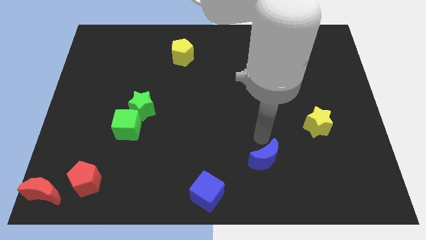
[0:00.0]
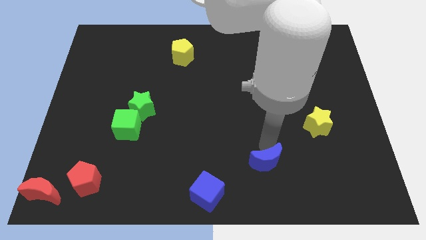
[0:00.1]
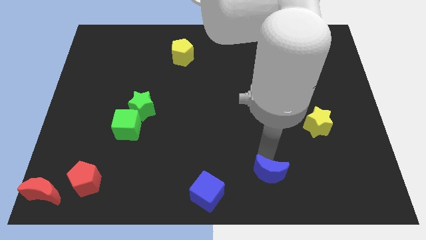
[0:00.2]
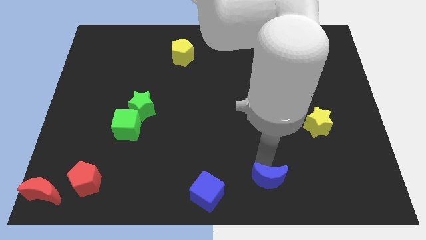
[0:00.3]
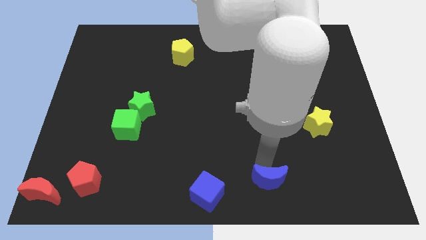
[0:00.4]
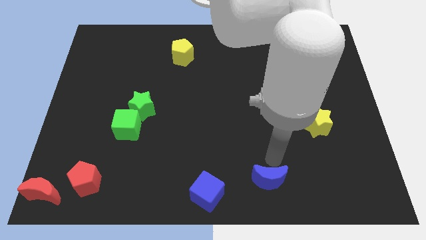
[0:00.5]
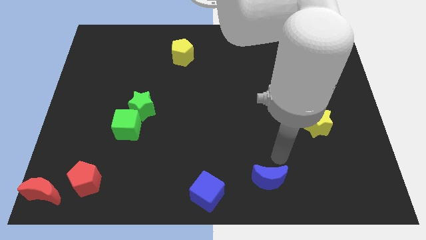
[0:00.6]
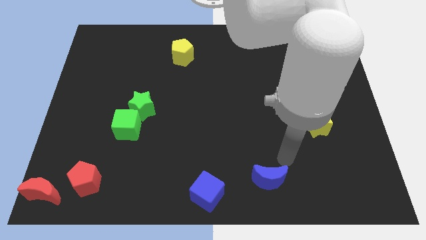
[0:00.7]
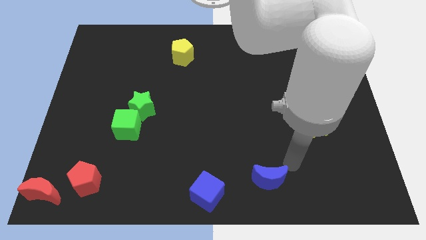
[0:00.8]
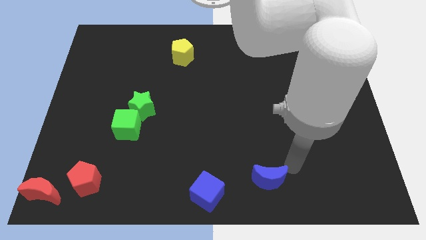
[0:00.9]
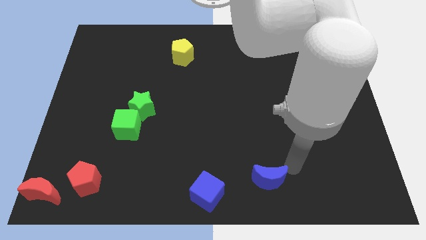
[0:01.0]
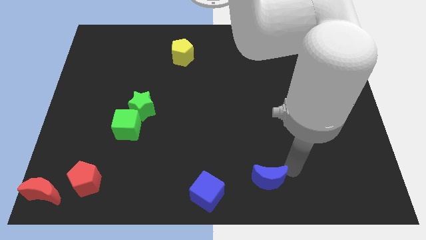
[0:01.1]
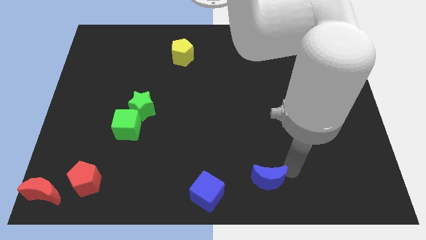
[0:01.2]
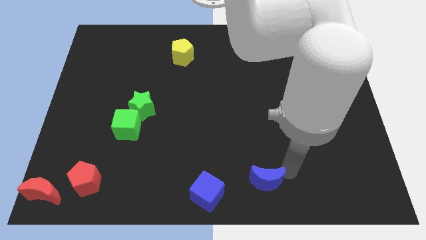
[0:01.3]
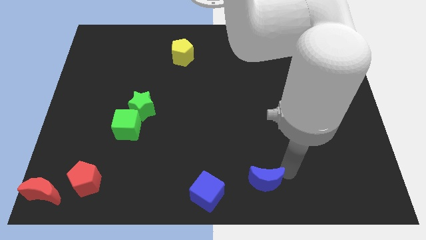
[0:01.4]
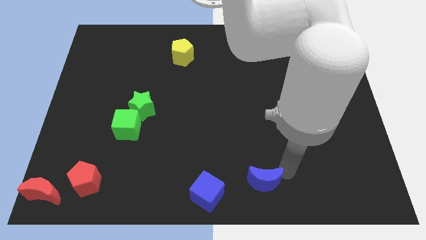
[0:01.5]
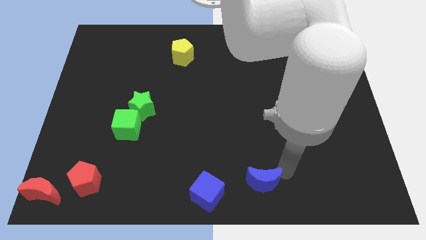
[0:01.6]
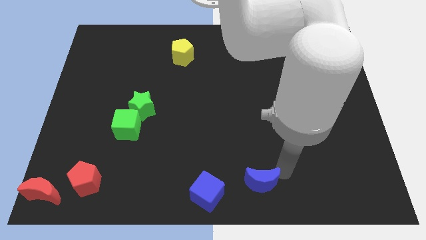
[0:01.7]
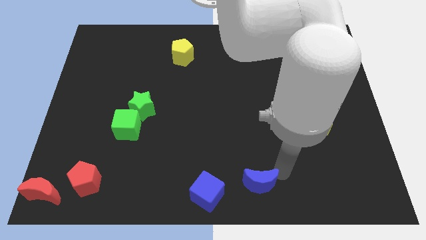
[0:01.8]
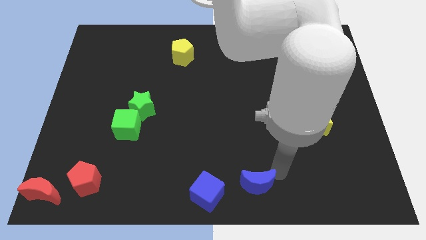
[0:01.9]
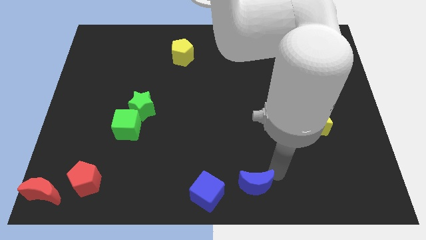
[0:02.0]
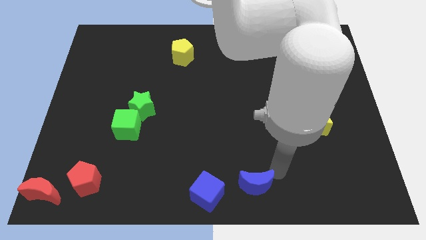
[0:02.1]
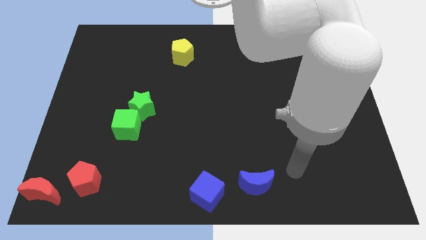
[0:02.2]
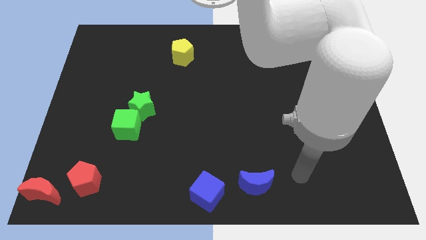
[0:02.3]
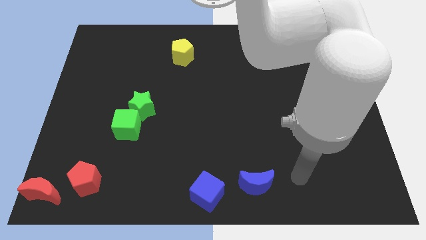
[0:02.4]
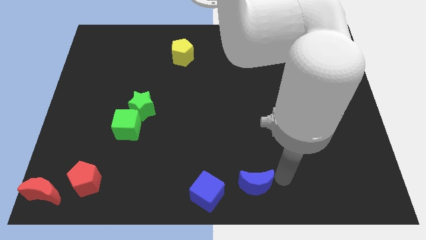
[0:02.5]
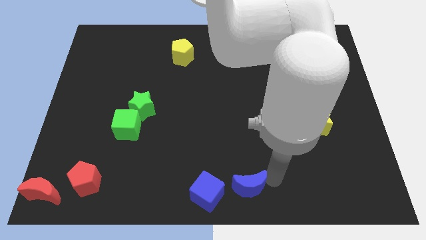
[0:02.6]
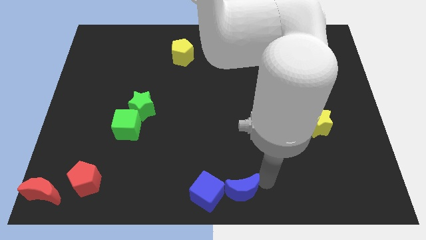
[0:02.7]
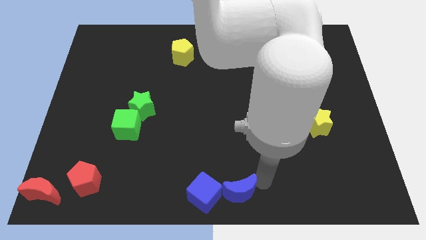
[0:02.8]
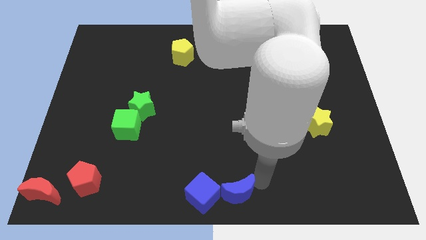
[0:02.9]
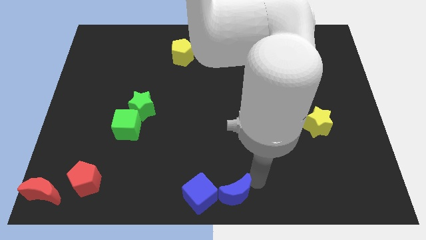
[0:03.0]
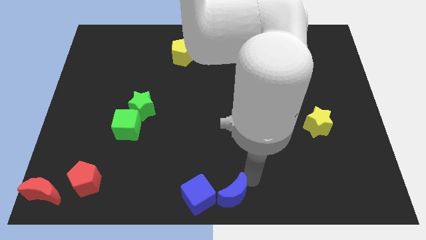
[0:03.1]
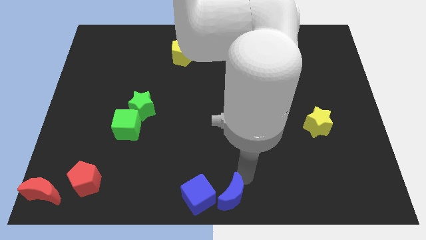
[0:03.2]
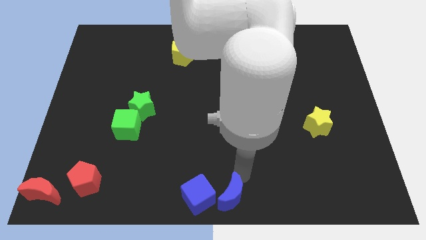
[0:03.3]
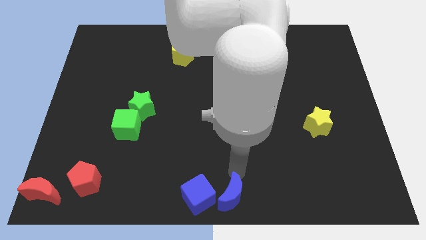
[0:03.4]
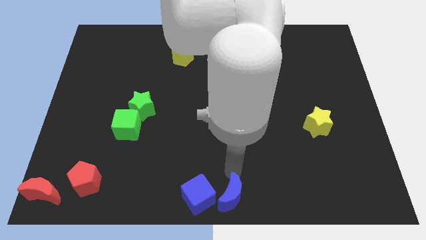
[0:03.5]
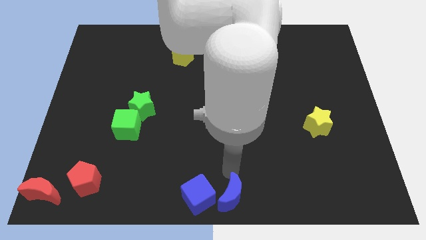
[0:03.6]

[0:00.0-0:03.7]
push blue moon into blue cube

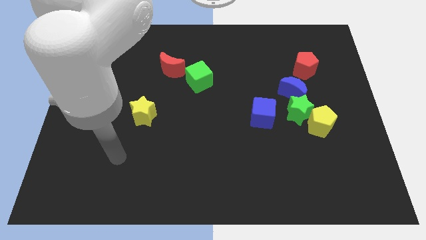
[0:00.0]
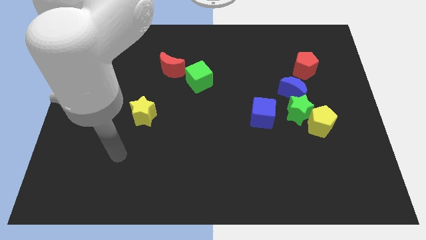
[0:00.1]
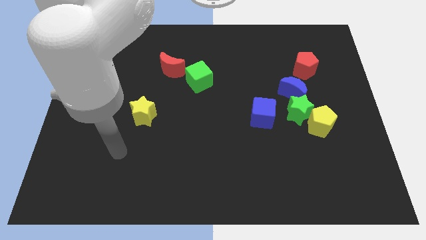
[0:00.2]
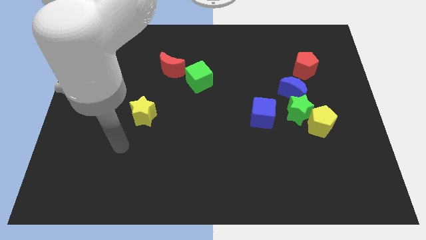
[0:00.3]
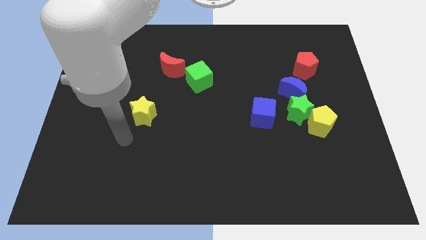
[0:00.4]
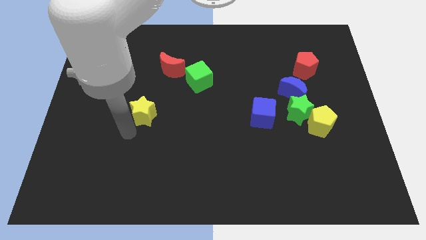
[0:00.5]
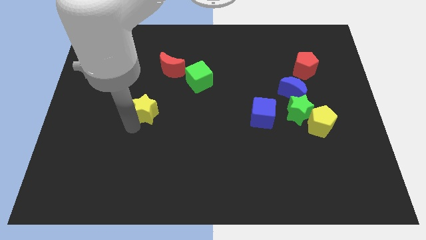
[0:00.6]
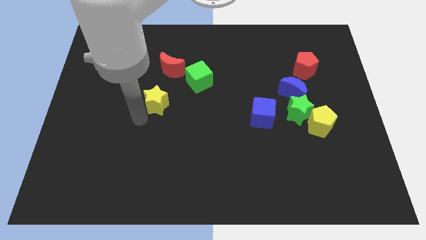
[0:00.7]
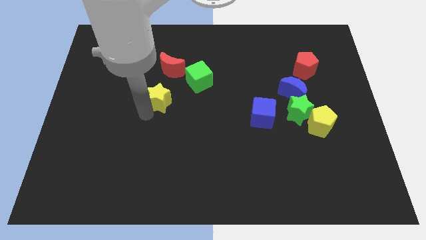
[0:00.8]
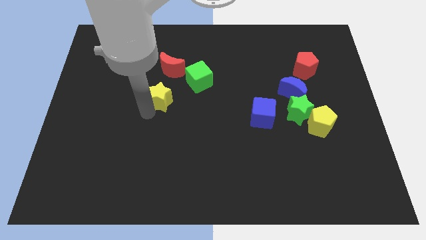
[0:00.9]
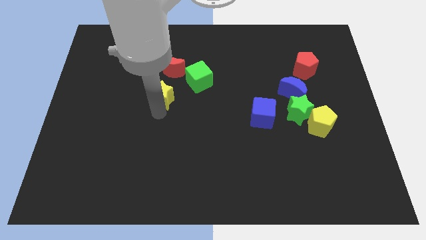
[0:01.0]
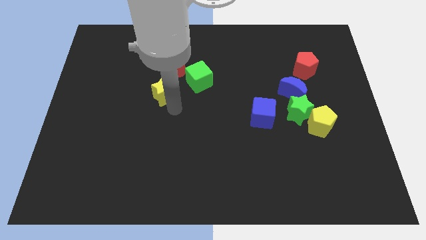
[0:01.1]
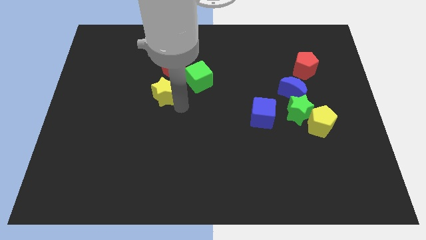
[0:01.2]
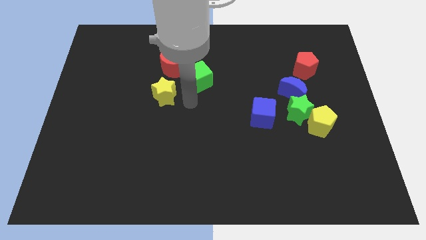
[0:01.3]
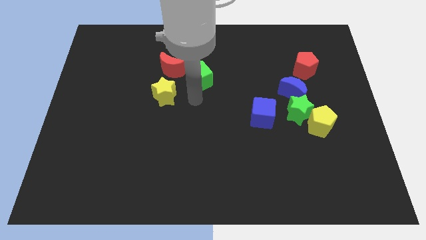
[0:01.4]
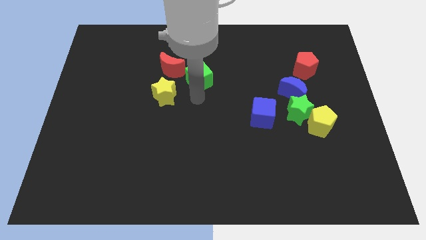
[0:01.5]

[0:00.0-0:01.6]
move the yellow star to the bottom of the red crescent

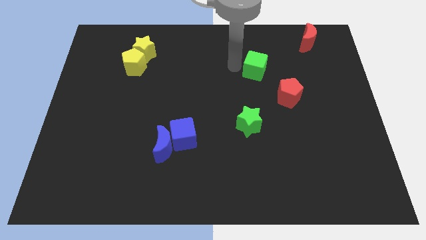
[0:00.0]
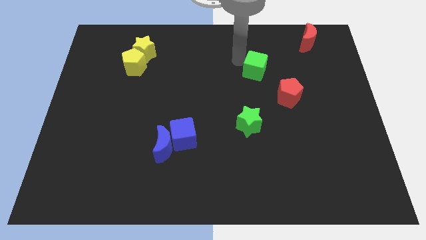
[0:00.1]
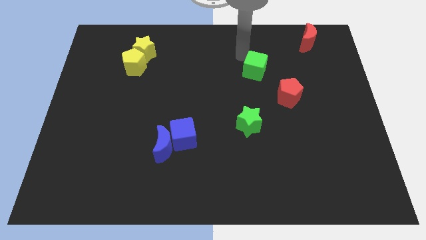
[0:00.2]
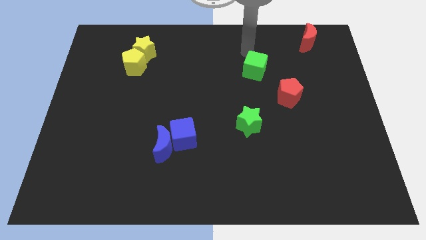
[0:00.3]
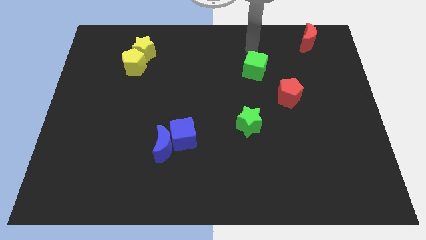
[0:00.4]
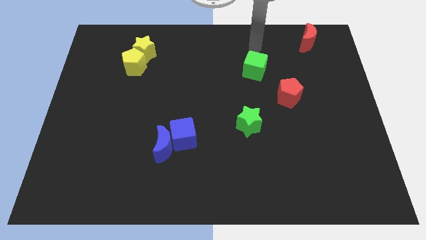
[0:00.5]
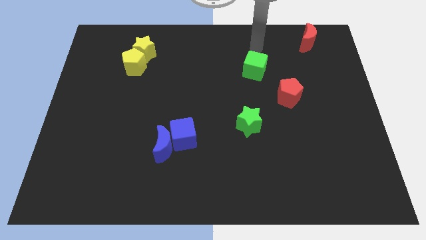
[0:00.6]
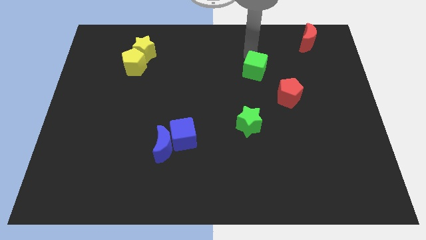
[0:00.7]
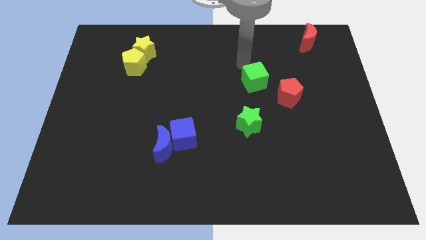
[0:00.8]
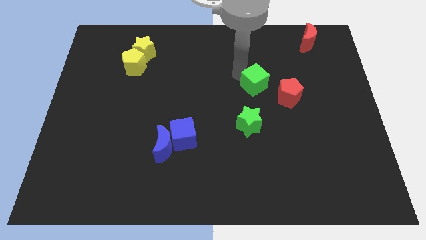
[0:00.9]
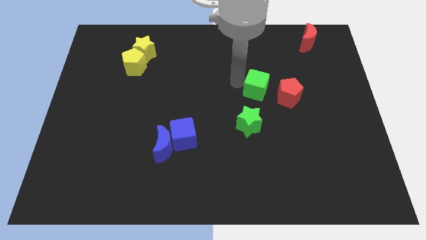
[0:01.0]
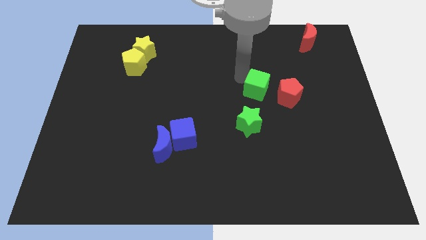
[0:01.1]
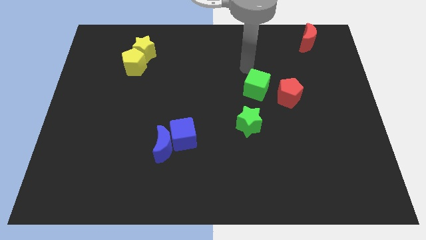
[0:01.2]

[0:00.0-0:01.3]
place green cube close to the left of red pentagon

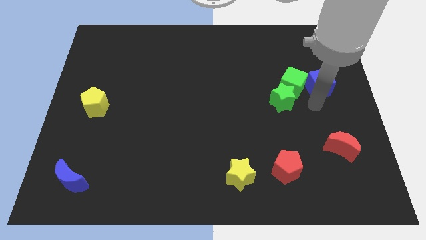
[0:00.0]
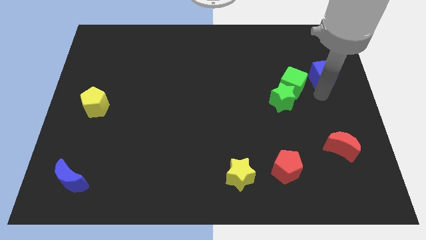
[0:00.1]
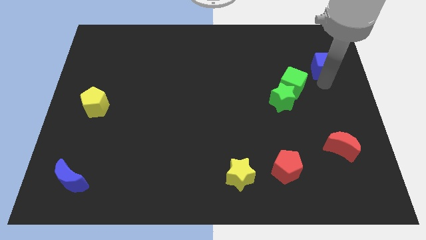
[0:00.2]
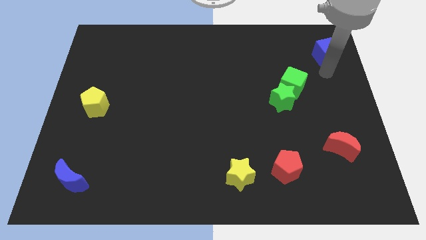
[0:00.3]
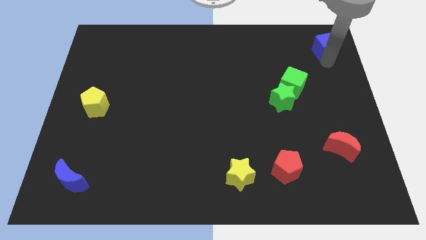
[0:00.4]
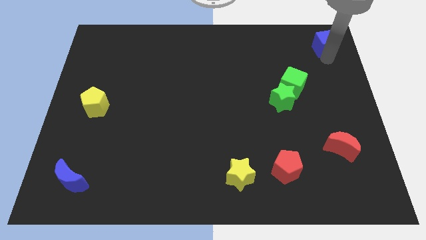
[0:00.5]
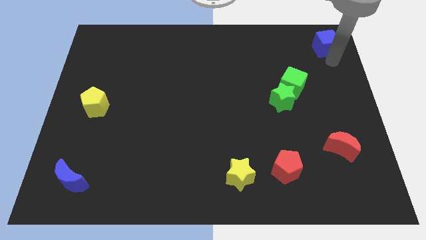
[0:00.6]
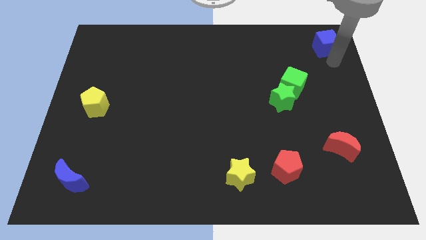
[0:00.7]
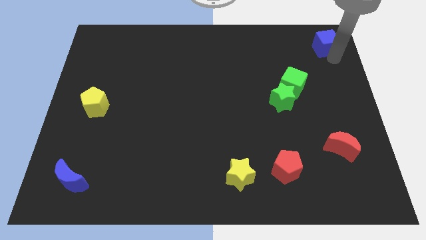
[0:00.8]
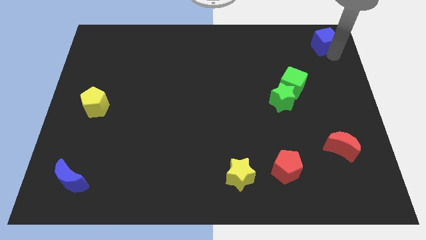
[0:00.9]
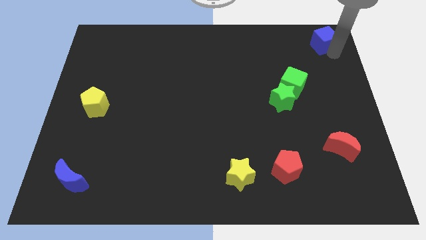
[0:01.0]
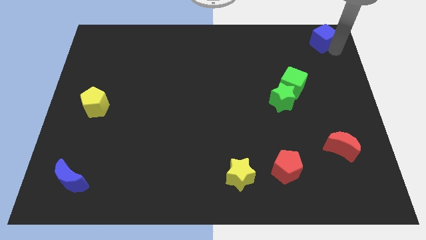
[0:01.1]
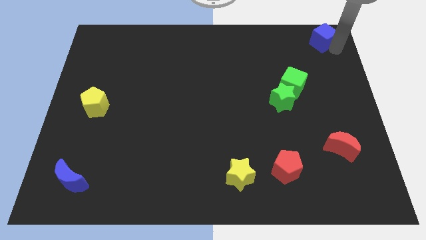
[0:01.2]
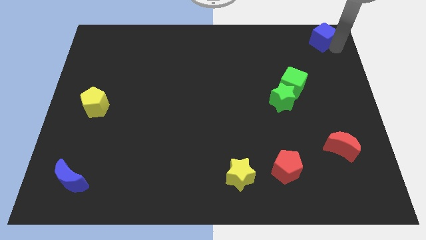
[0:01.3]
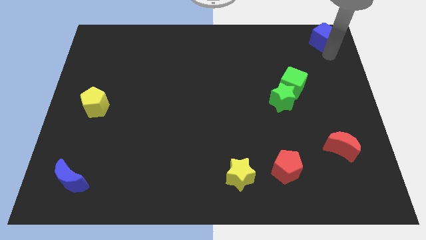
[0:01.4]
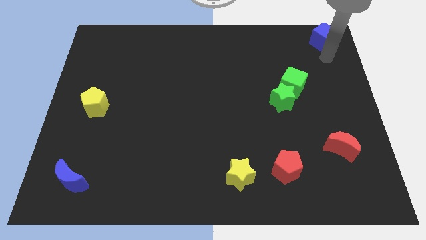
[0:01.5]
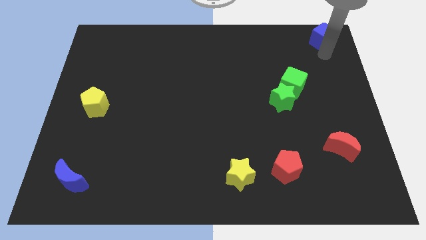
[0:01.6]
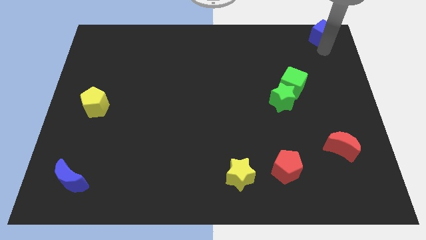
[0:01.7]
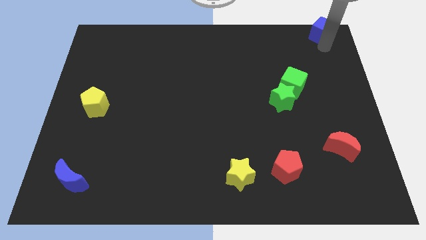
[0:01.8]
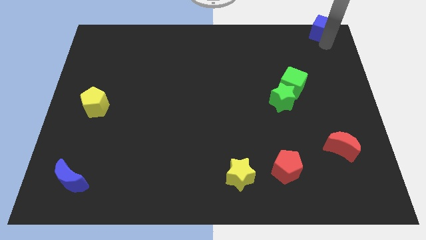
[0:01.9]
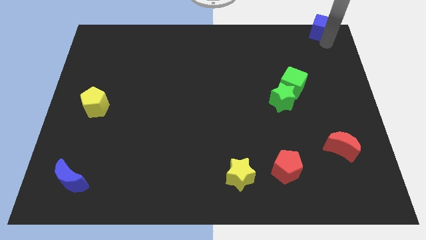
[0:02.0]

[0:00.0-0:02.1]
move the blue cube to the top right

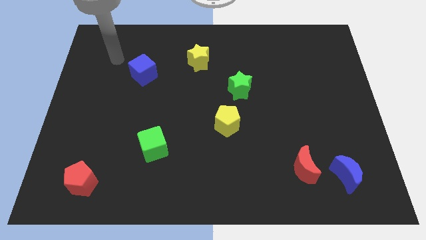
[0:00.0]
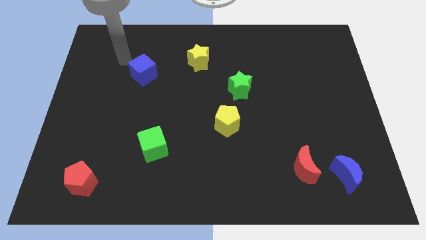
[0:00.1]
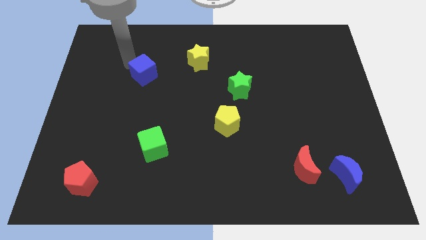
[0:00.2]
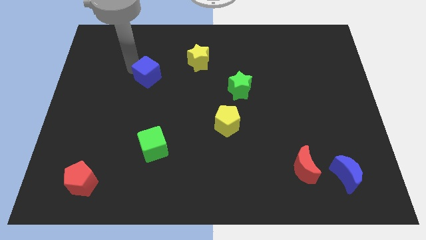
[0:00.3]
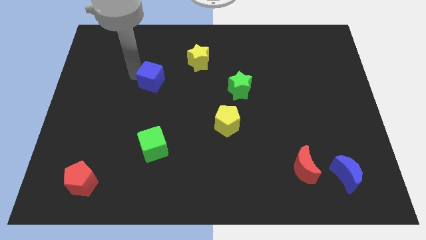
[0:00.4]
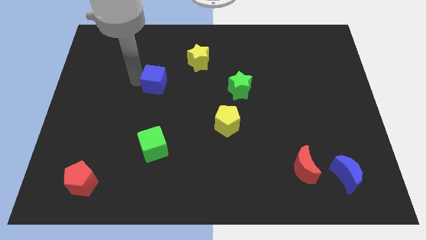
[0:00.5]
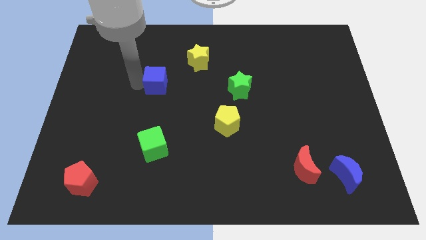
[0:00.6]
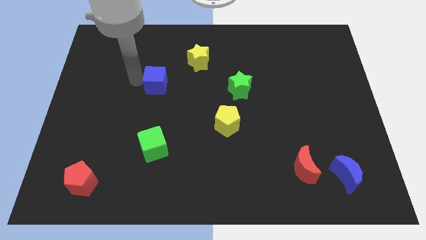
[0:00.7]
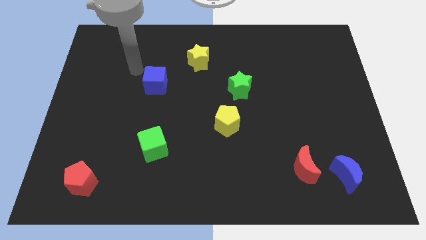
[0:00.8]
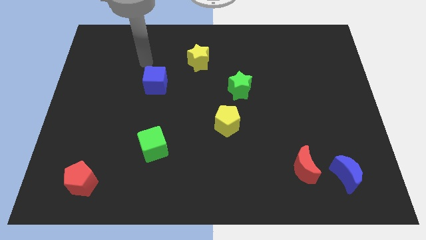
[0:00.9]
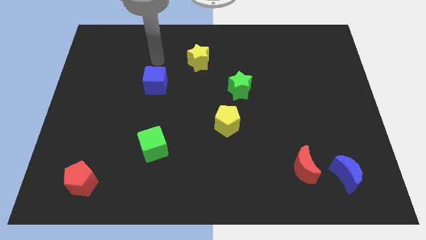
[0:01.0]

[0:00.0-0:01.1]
slide blue cube slightly down vertical to green cube
